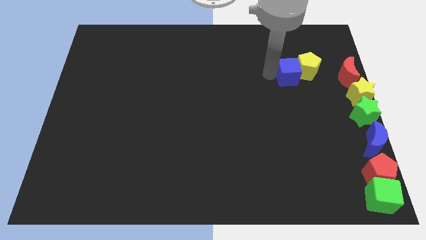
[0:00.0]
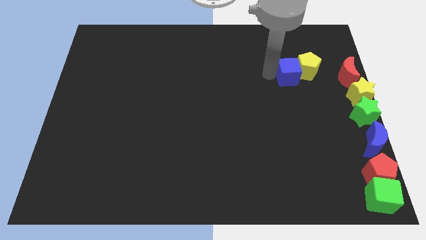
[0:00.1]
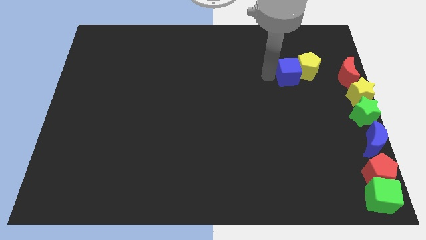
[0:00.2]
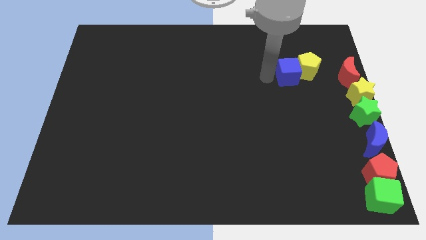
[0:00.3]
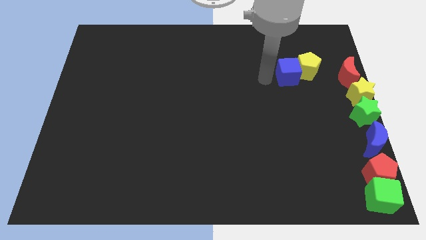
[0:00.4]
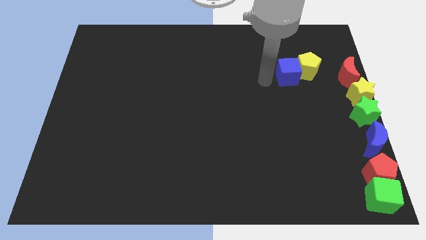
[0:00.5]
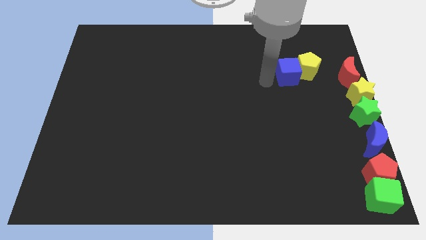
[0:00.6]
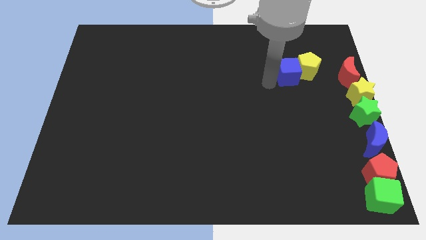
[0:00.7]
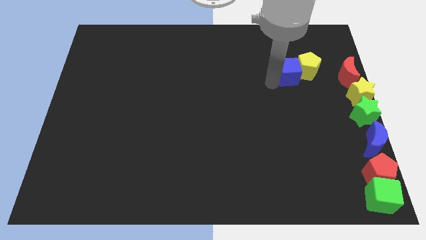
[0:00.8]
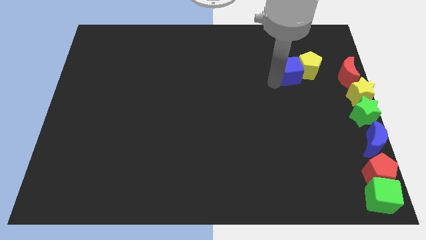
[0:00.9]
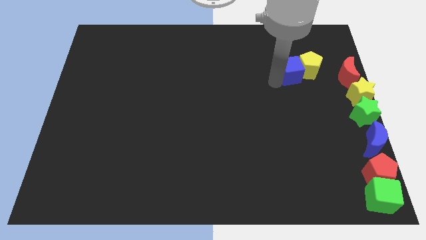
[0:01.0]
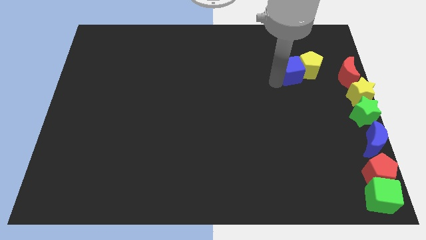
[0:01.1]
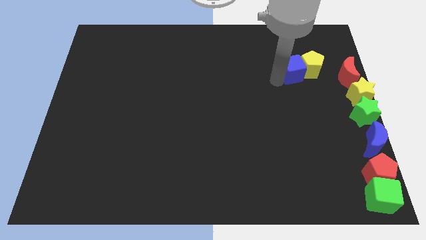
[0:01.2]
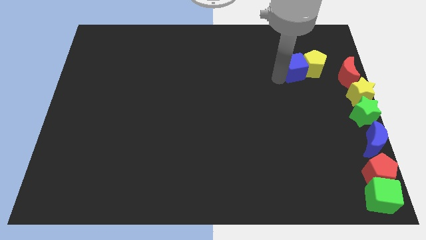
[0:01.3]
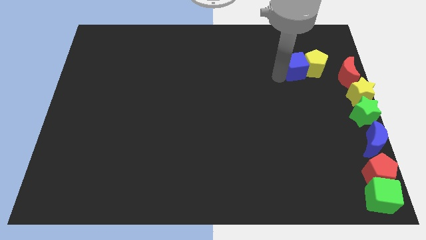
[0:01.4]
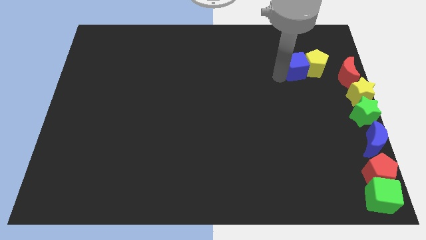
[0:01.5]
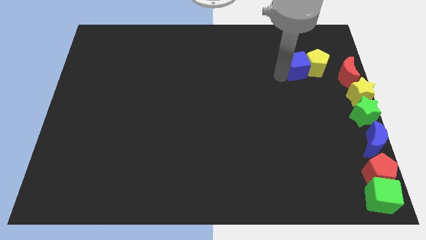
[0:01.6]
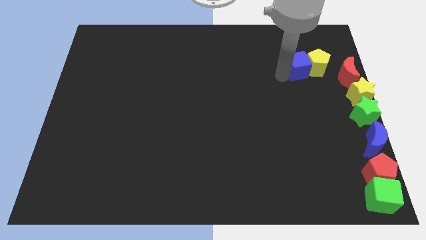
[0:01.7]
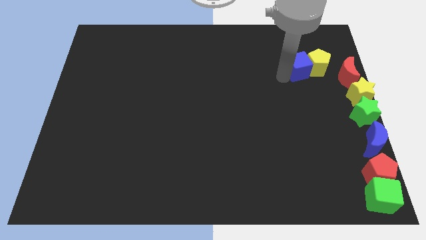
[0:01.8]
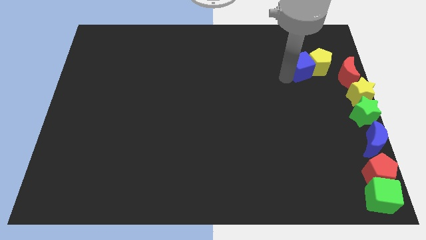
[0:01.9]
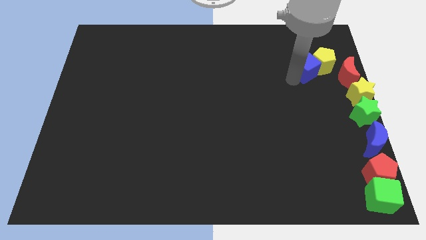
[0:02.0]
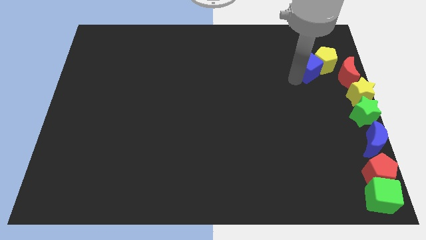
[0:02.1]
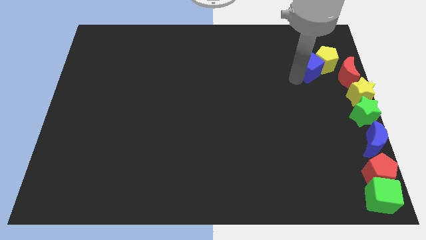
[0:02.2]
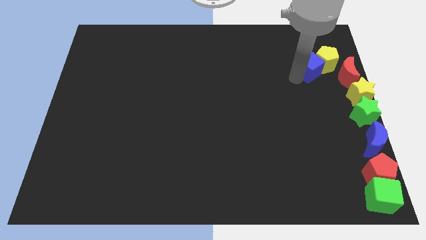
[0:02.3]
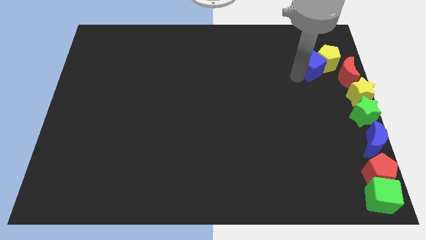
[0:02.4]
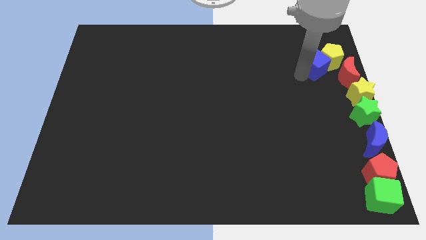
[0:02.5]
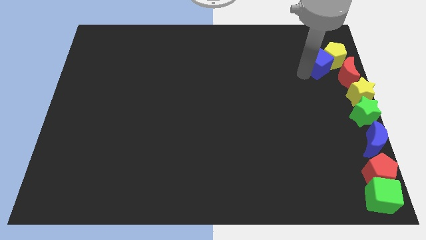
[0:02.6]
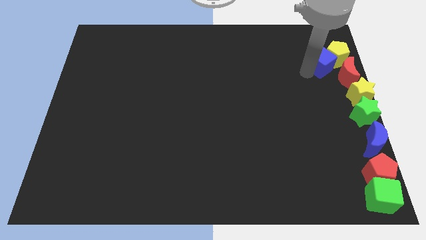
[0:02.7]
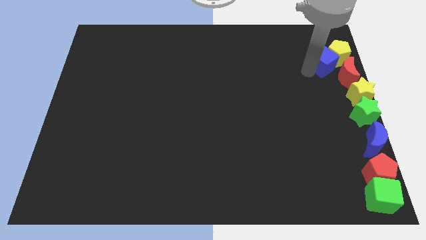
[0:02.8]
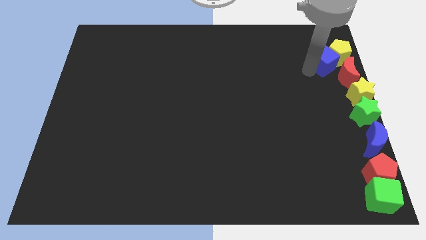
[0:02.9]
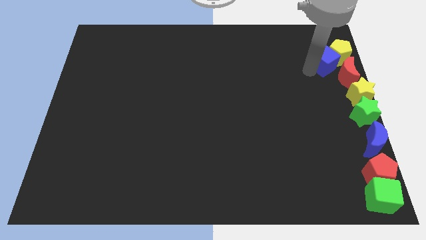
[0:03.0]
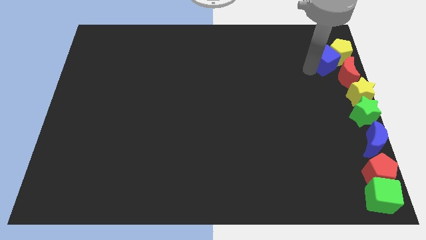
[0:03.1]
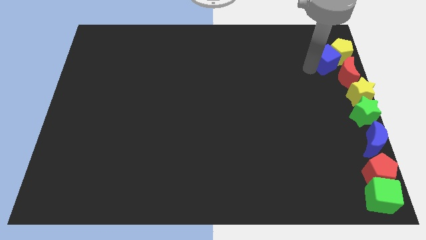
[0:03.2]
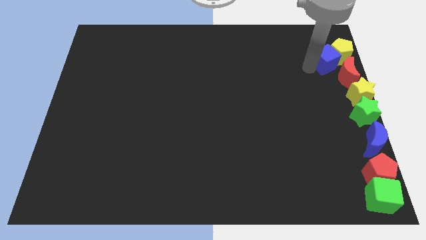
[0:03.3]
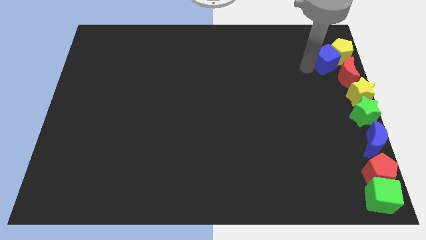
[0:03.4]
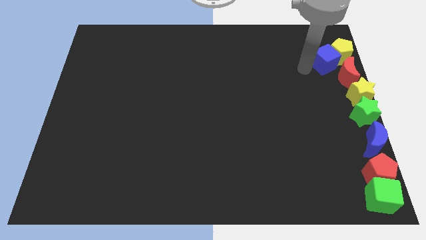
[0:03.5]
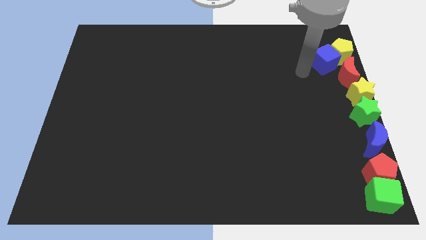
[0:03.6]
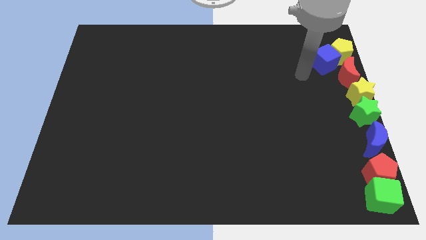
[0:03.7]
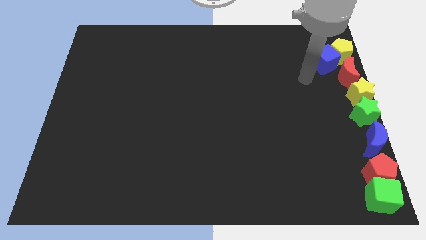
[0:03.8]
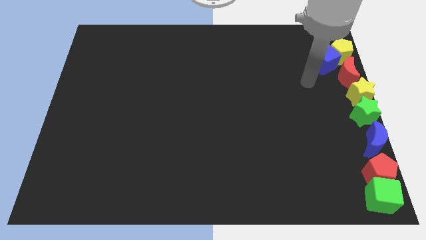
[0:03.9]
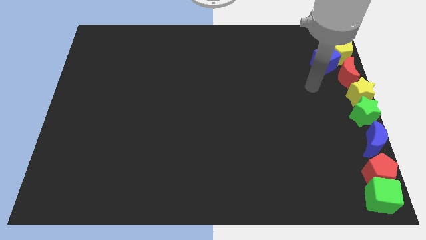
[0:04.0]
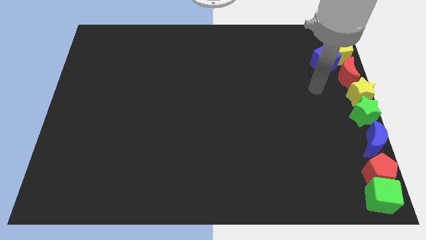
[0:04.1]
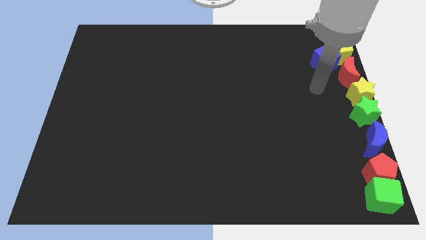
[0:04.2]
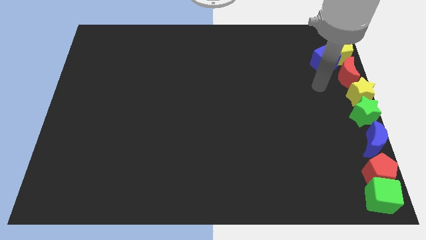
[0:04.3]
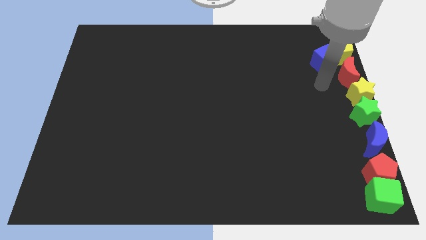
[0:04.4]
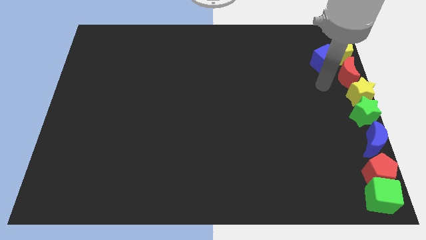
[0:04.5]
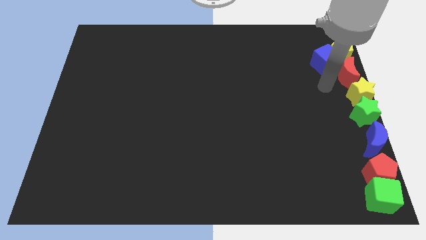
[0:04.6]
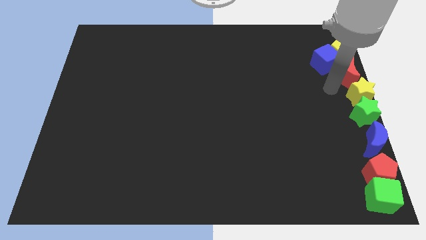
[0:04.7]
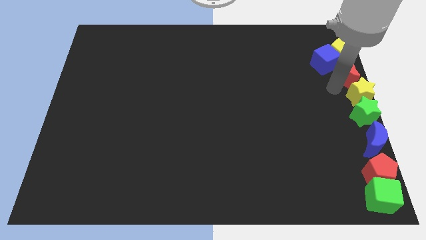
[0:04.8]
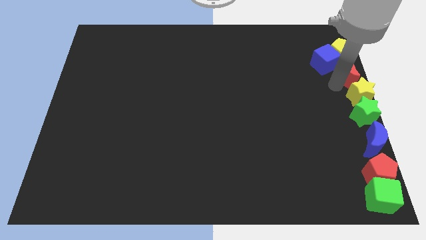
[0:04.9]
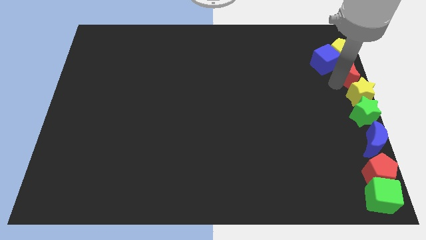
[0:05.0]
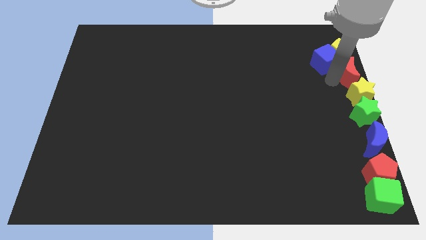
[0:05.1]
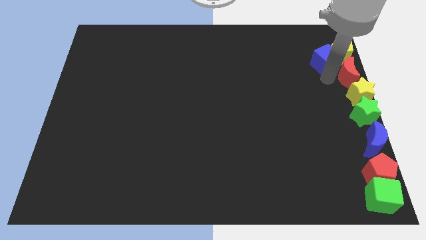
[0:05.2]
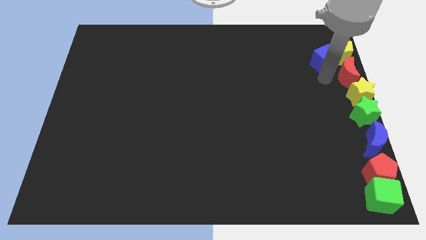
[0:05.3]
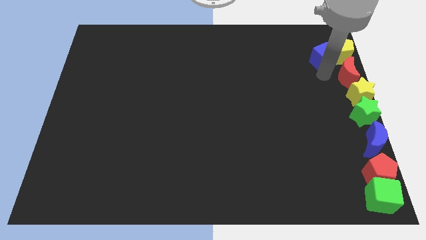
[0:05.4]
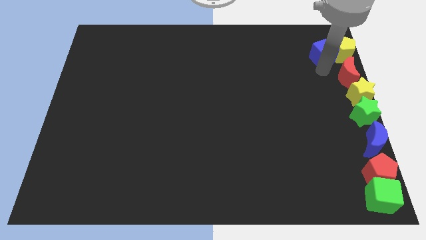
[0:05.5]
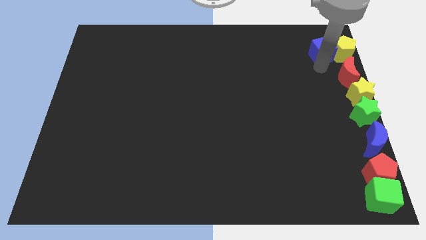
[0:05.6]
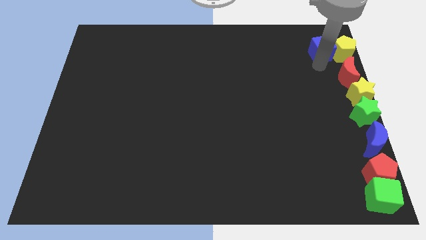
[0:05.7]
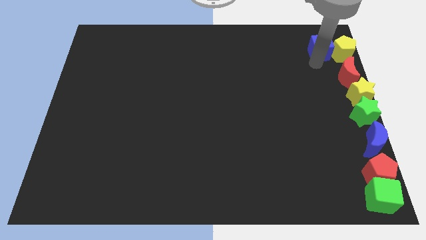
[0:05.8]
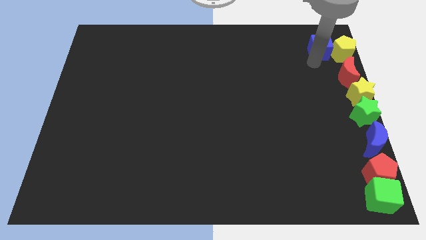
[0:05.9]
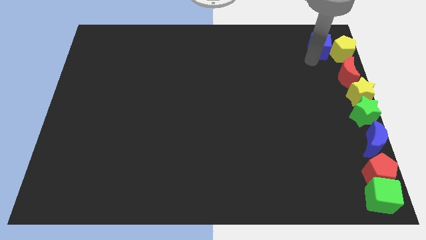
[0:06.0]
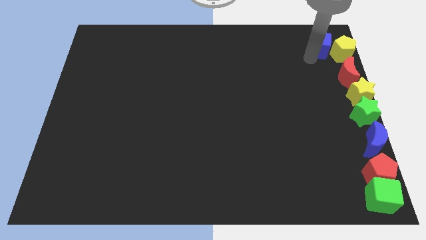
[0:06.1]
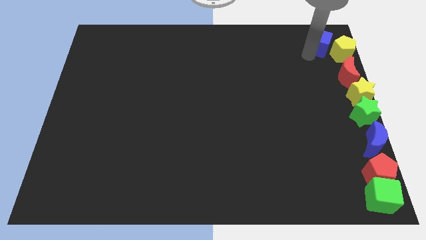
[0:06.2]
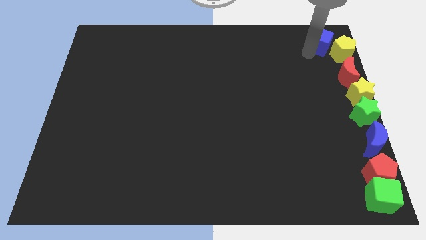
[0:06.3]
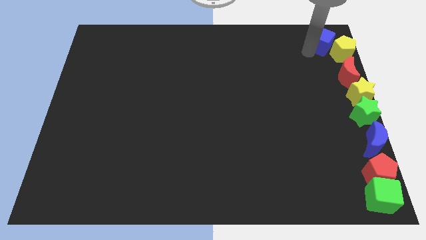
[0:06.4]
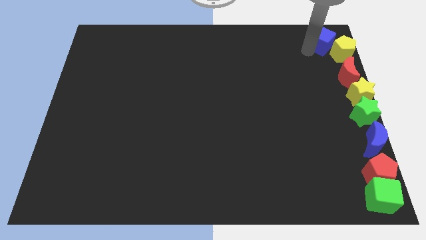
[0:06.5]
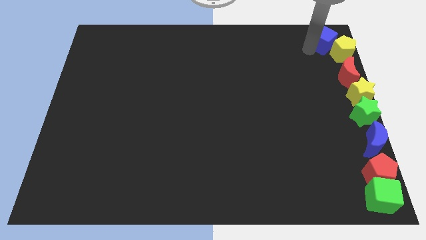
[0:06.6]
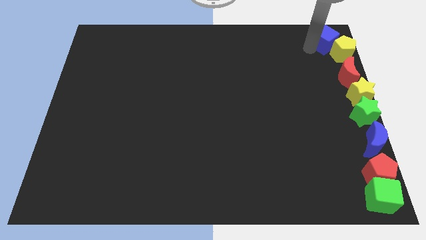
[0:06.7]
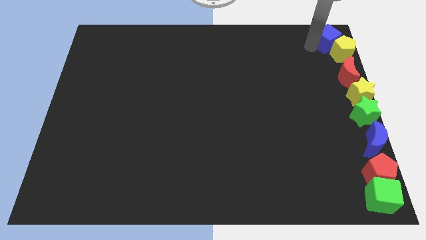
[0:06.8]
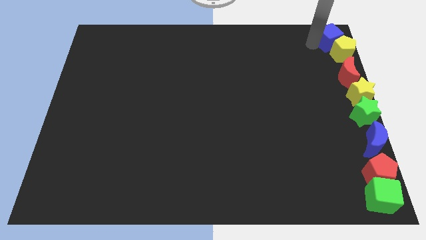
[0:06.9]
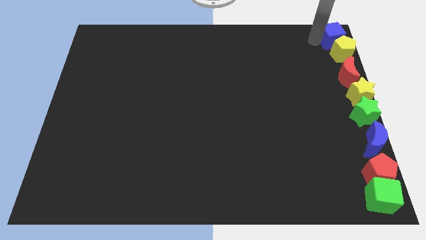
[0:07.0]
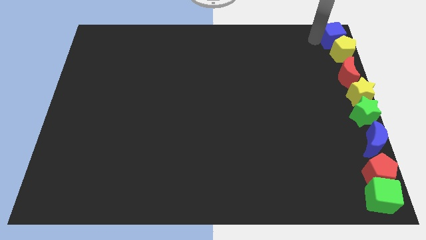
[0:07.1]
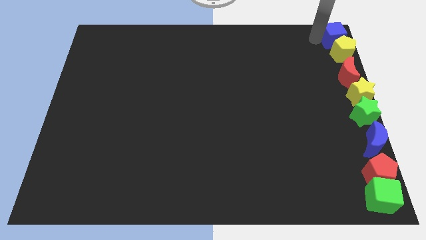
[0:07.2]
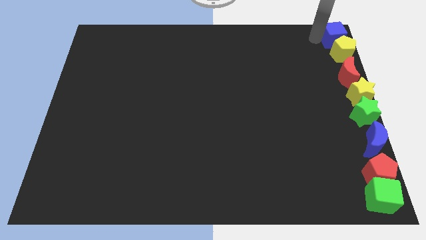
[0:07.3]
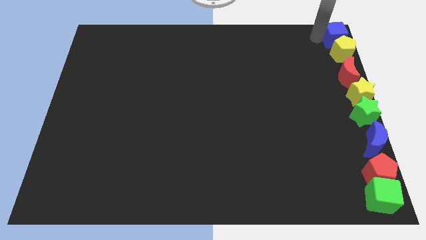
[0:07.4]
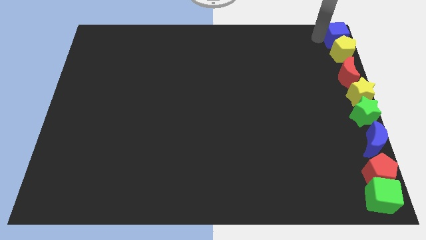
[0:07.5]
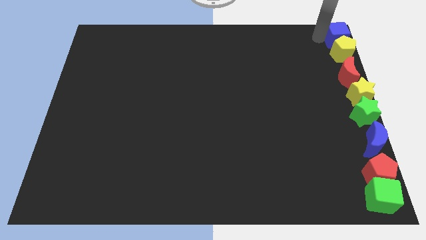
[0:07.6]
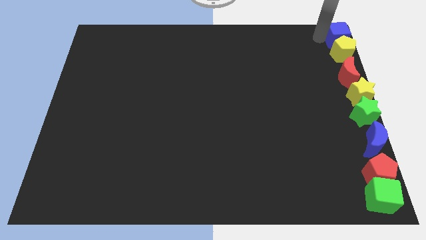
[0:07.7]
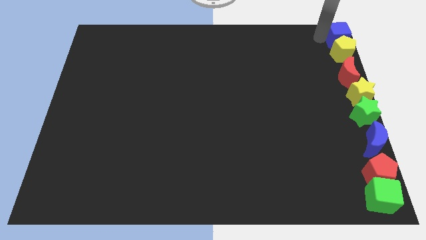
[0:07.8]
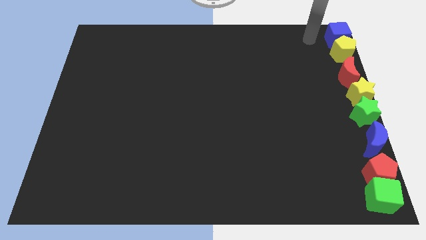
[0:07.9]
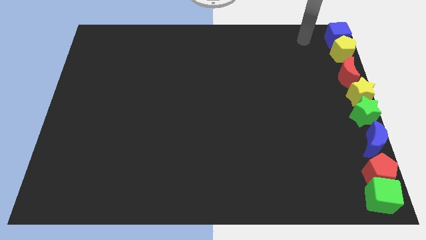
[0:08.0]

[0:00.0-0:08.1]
move blue cube to the top right corner of the board

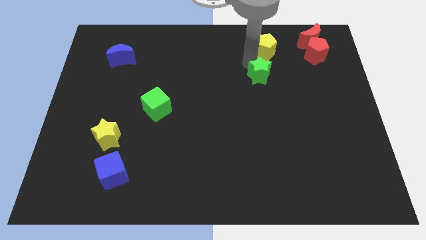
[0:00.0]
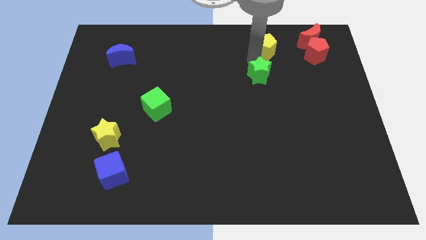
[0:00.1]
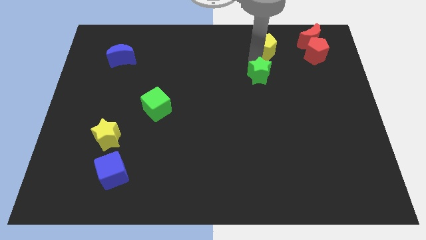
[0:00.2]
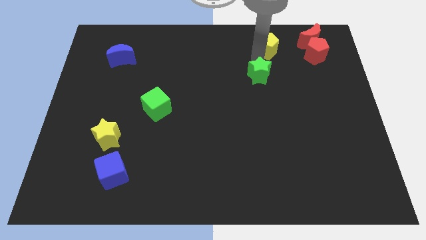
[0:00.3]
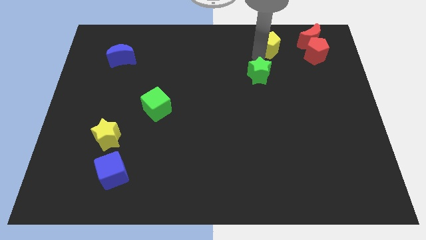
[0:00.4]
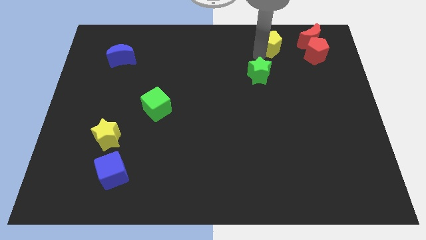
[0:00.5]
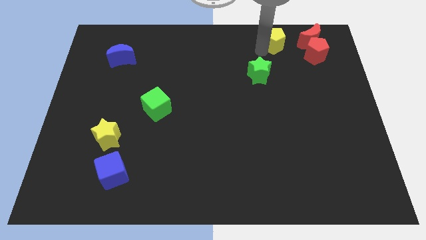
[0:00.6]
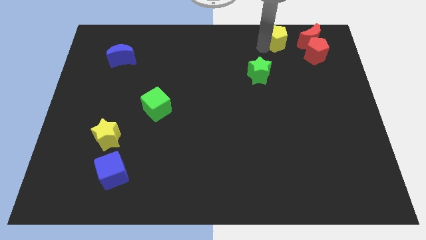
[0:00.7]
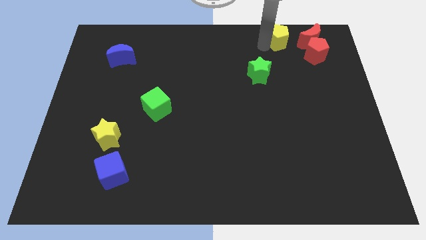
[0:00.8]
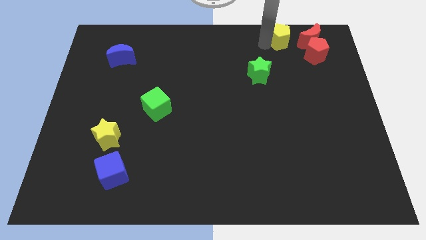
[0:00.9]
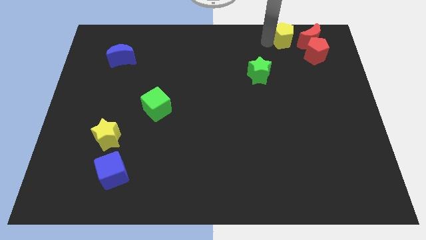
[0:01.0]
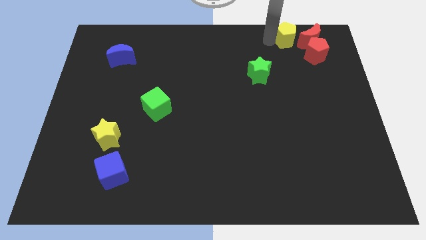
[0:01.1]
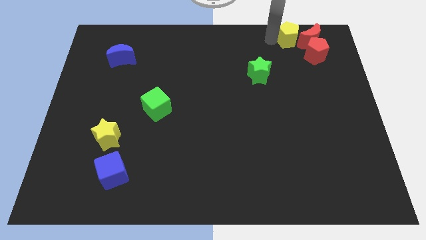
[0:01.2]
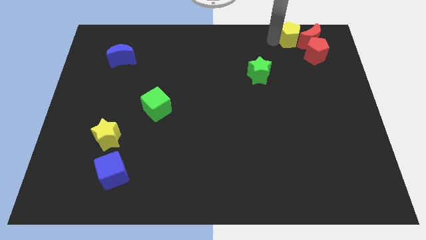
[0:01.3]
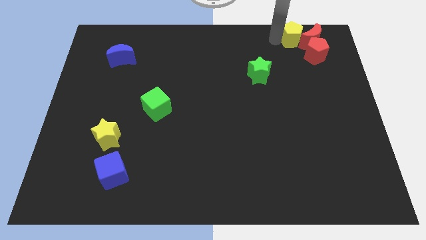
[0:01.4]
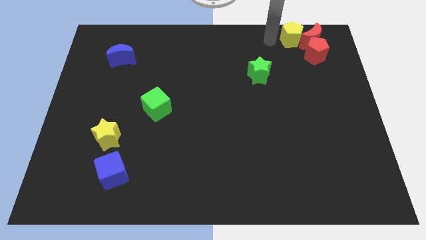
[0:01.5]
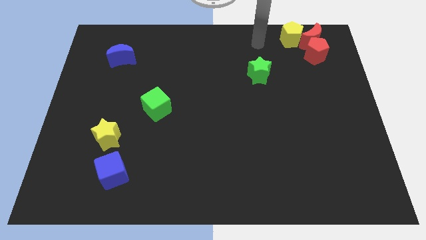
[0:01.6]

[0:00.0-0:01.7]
place yellow pentagon near red crescent
